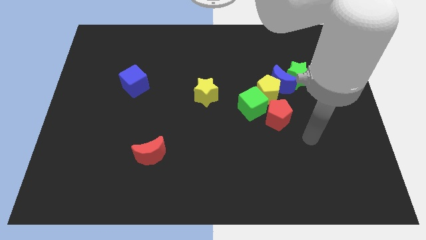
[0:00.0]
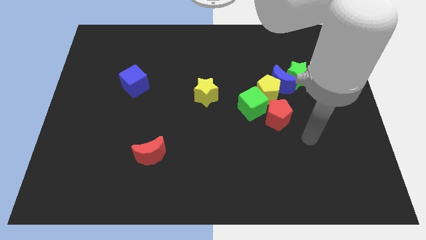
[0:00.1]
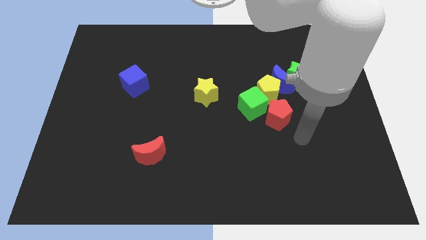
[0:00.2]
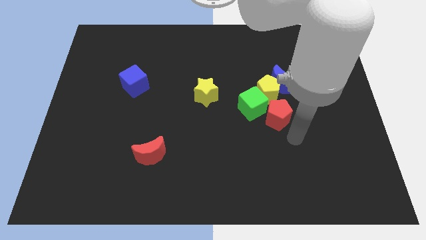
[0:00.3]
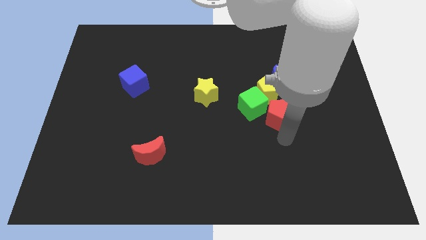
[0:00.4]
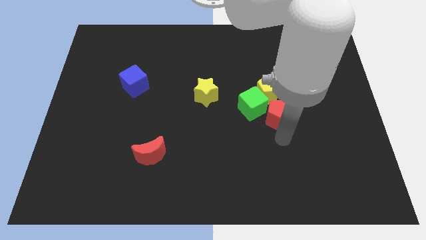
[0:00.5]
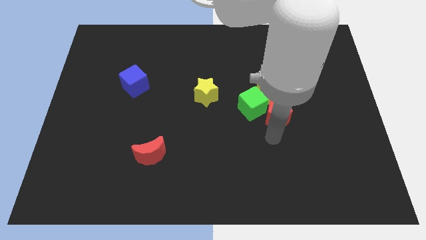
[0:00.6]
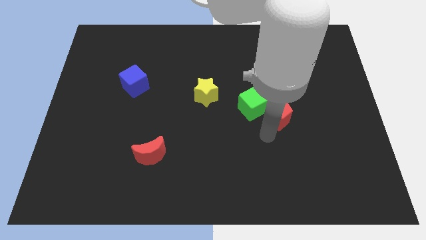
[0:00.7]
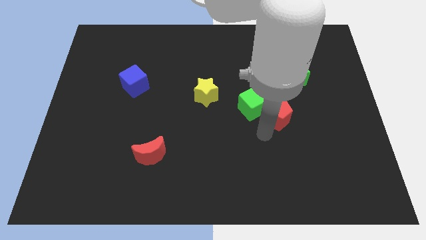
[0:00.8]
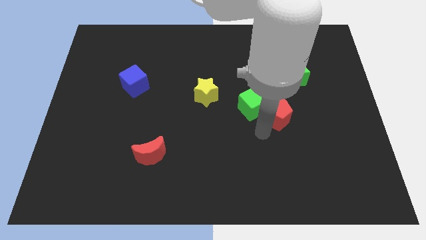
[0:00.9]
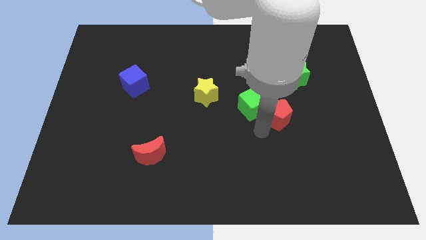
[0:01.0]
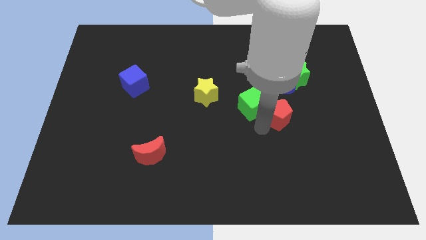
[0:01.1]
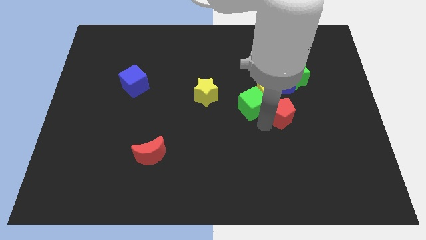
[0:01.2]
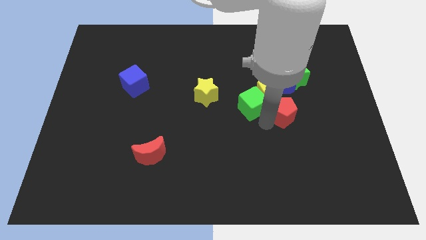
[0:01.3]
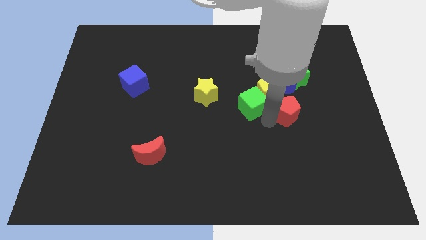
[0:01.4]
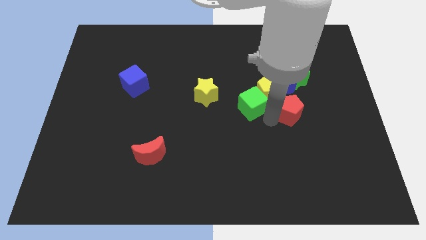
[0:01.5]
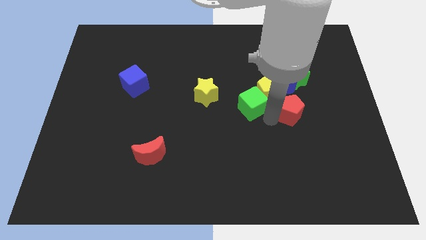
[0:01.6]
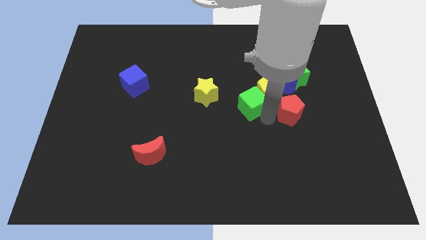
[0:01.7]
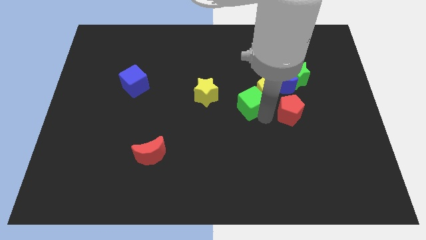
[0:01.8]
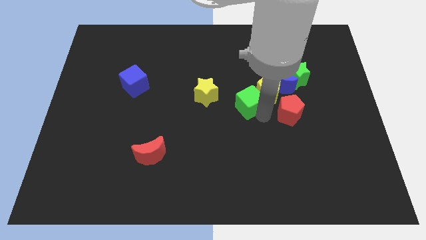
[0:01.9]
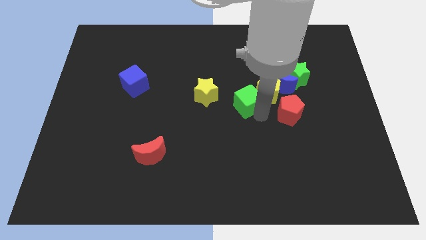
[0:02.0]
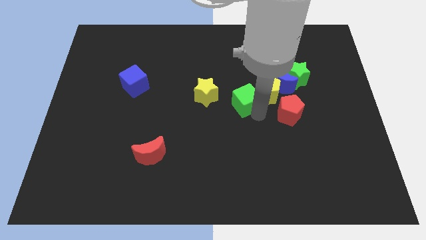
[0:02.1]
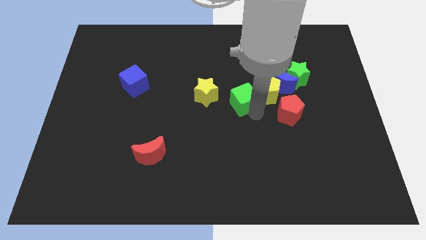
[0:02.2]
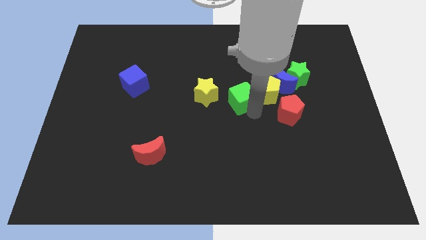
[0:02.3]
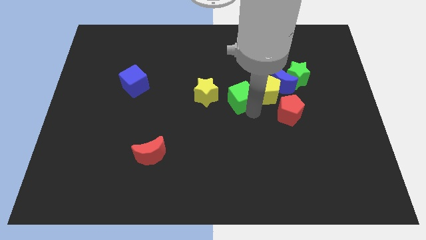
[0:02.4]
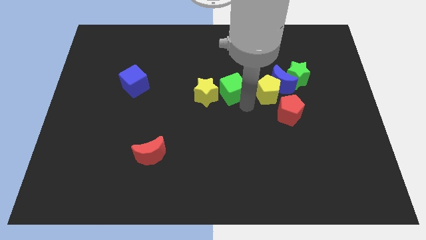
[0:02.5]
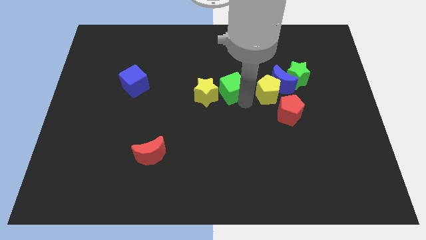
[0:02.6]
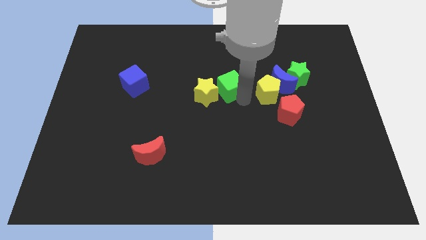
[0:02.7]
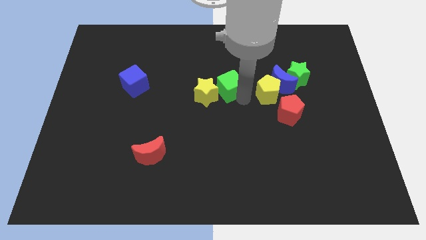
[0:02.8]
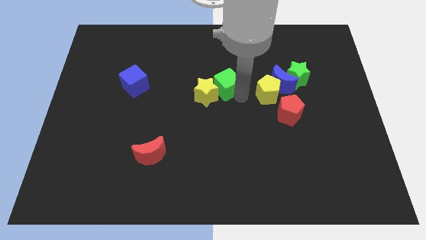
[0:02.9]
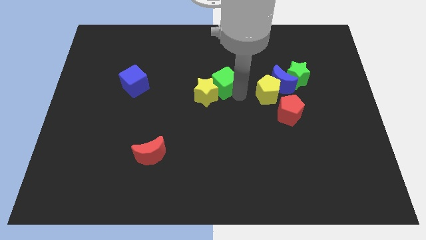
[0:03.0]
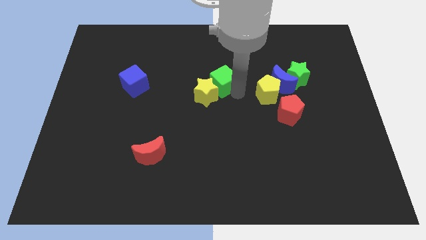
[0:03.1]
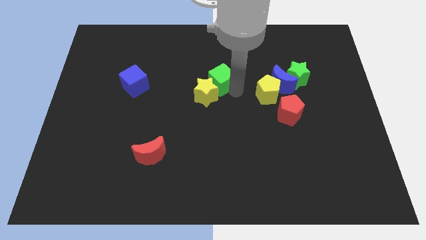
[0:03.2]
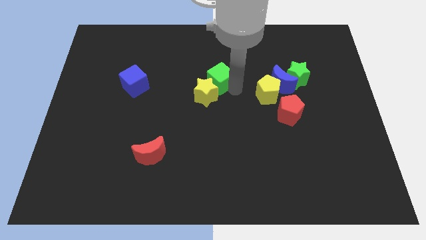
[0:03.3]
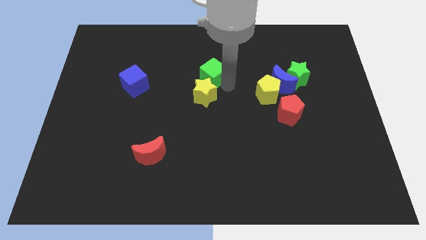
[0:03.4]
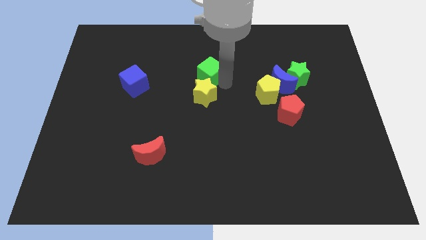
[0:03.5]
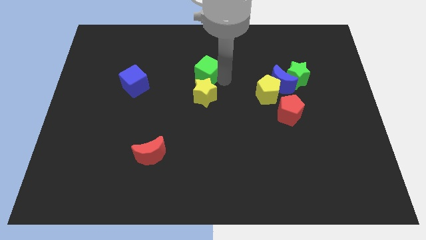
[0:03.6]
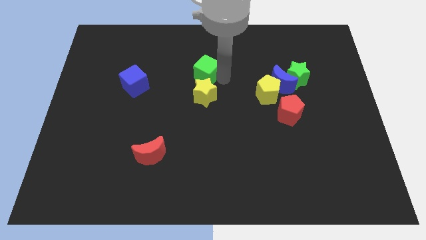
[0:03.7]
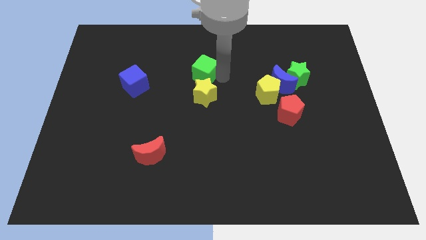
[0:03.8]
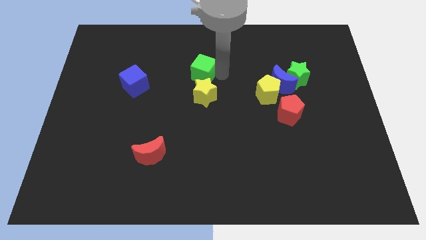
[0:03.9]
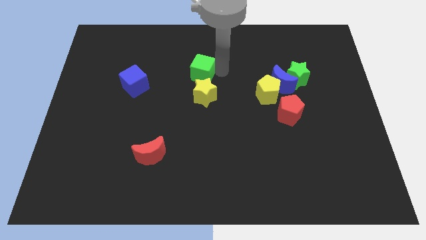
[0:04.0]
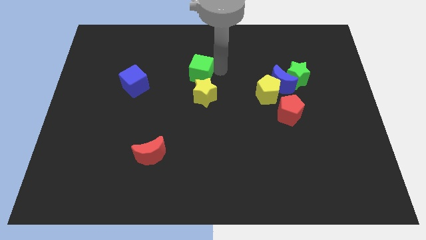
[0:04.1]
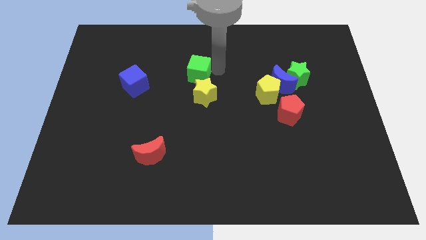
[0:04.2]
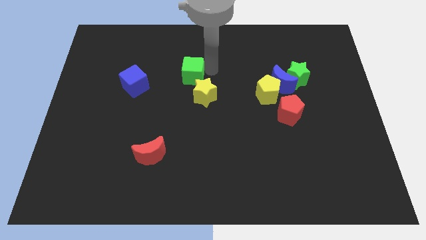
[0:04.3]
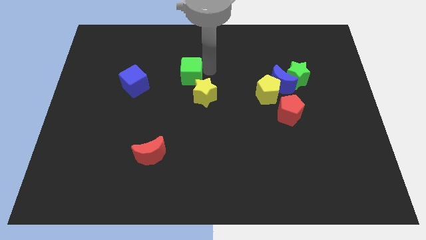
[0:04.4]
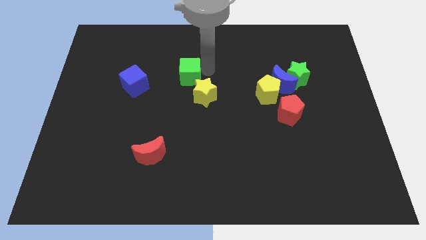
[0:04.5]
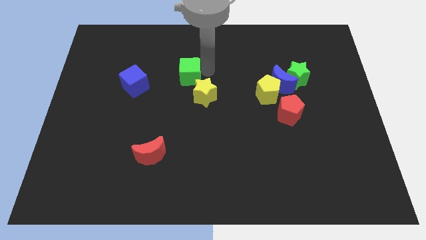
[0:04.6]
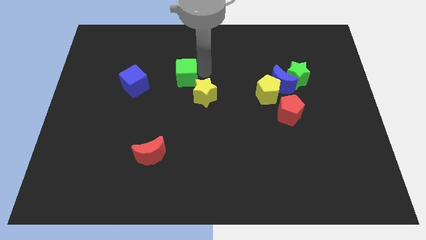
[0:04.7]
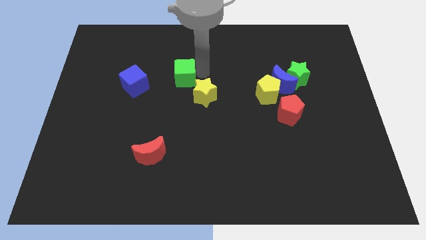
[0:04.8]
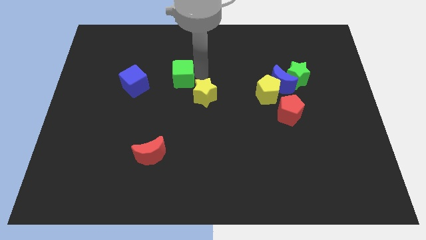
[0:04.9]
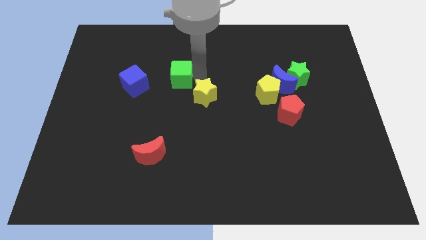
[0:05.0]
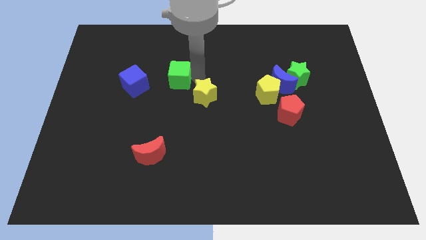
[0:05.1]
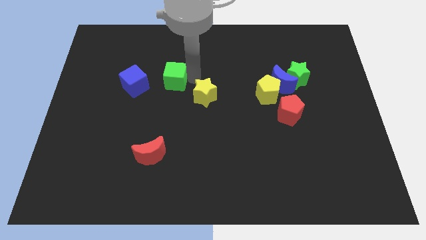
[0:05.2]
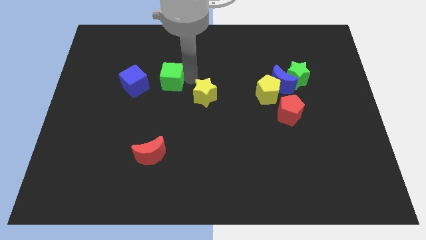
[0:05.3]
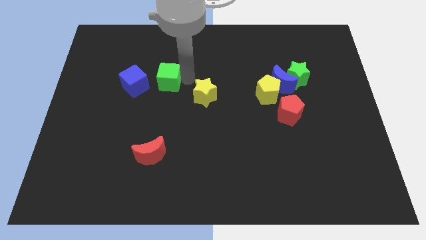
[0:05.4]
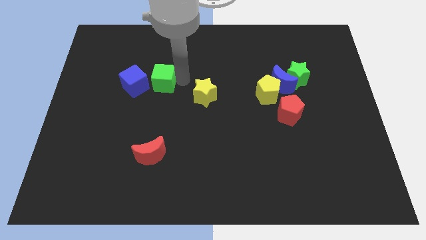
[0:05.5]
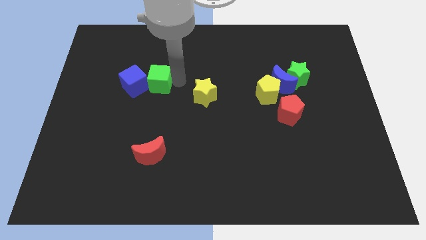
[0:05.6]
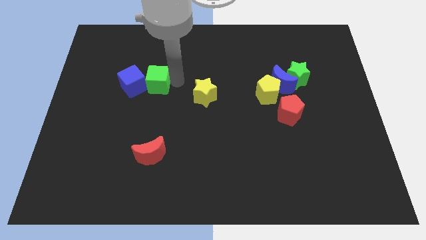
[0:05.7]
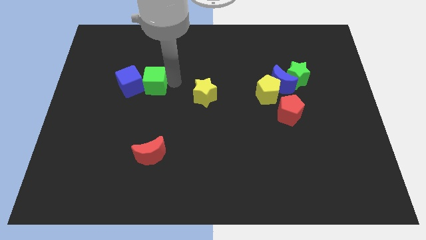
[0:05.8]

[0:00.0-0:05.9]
push the green cube towards the blue cube

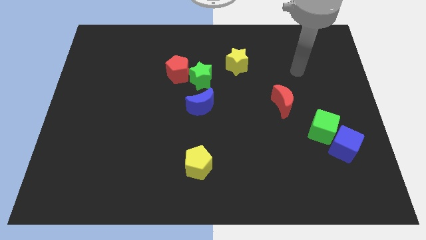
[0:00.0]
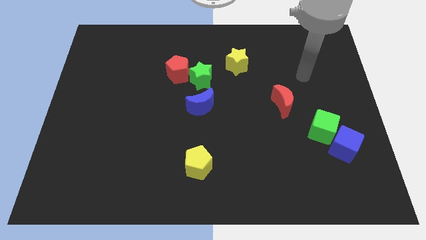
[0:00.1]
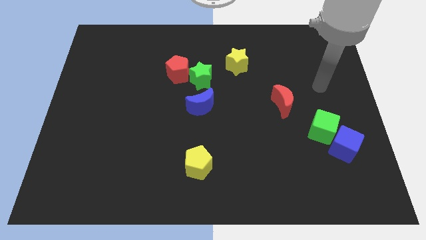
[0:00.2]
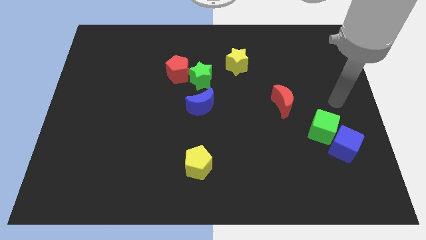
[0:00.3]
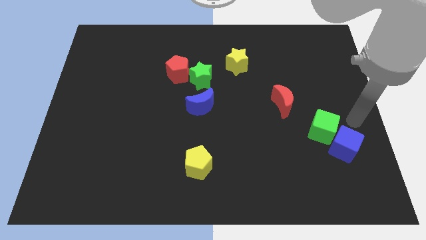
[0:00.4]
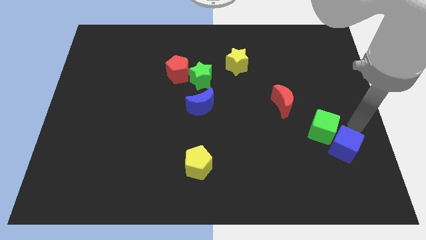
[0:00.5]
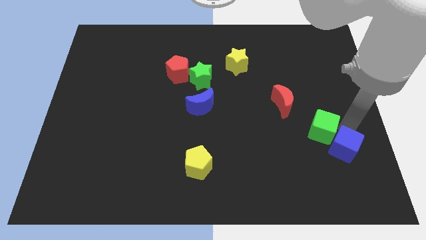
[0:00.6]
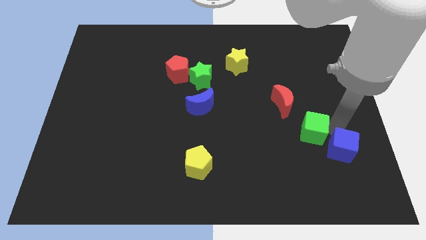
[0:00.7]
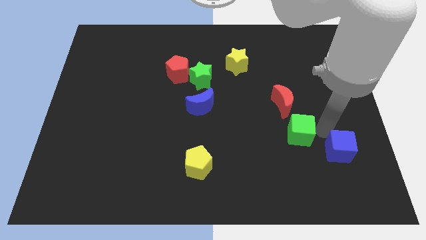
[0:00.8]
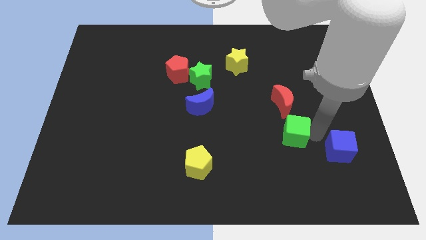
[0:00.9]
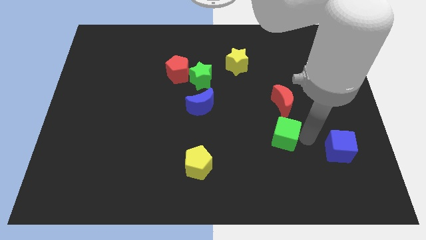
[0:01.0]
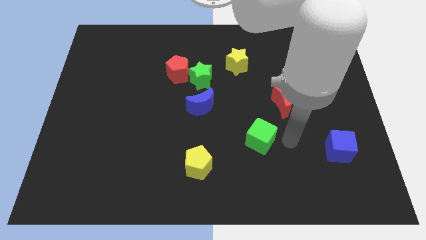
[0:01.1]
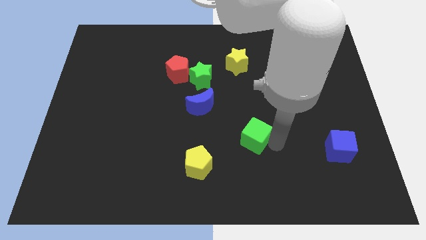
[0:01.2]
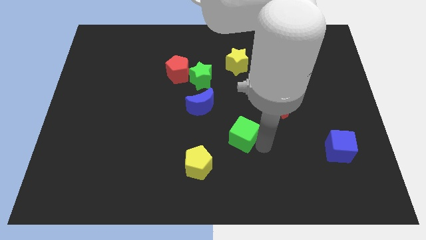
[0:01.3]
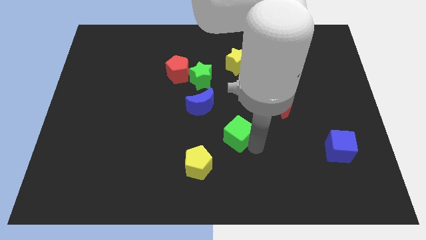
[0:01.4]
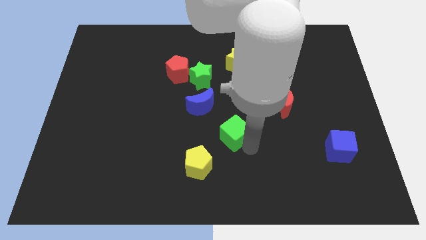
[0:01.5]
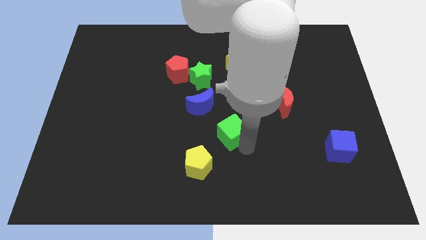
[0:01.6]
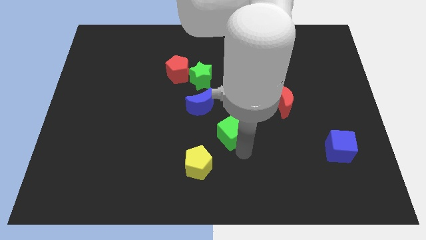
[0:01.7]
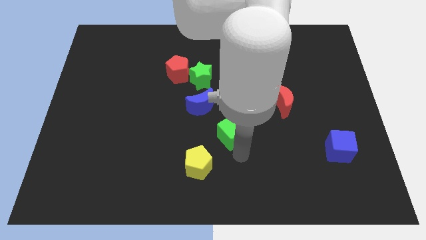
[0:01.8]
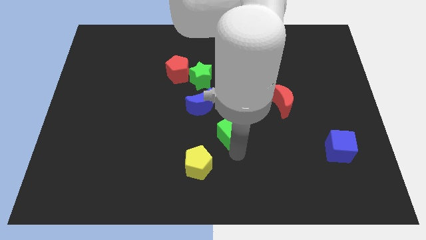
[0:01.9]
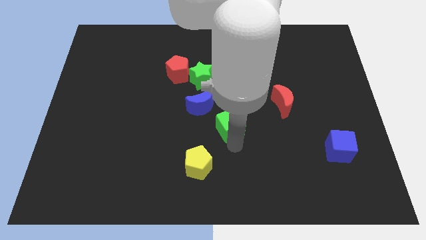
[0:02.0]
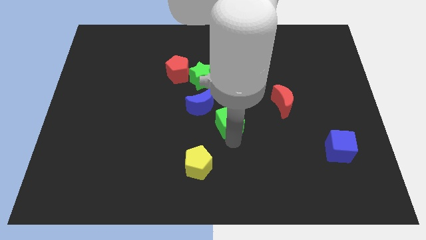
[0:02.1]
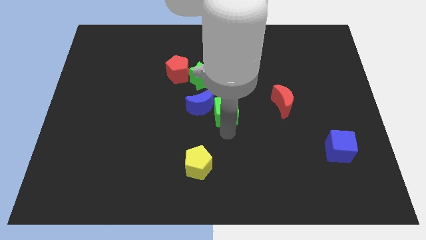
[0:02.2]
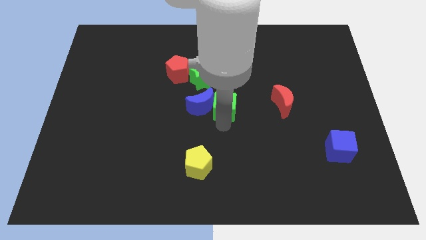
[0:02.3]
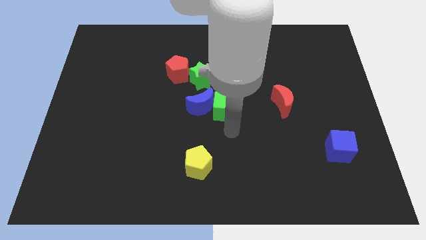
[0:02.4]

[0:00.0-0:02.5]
move the green cube next to the blue moon
